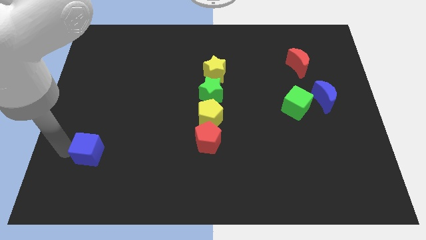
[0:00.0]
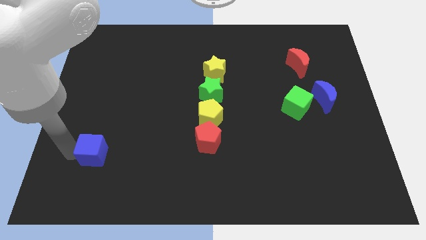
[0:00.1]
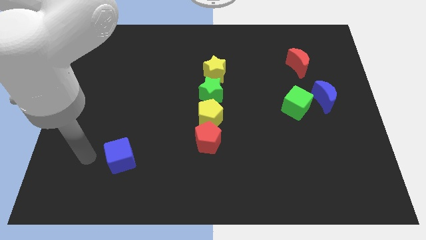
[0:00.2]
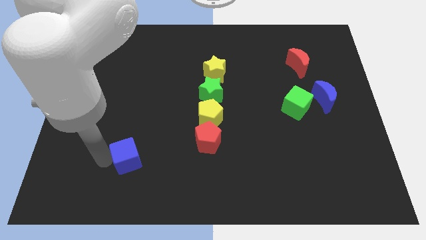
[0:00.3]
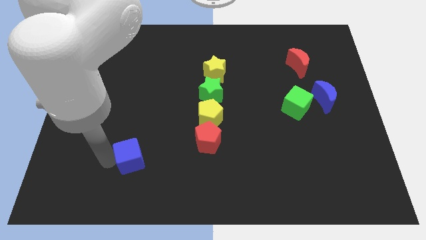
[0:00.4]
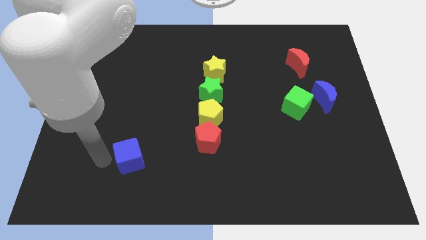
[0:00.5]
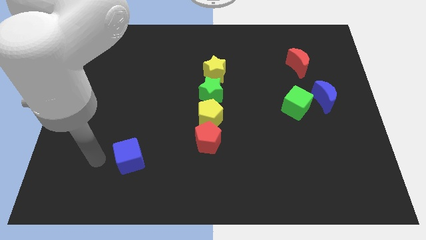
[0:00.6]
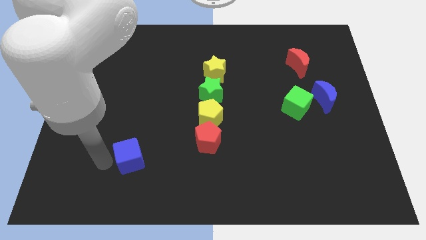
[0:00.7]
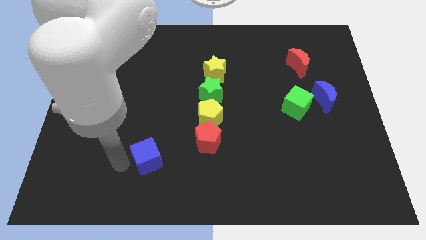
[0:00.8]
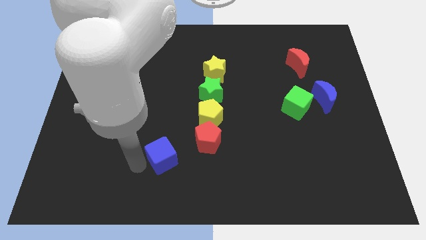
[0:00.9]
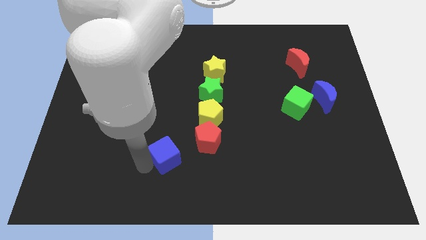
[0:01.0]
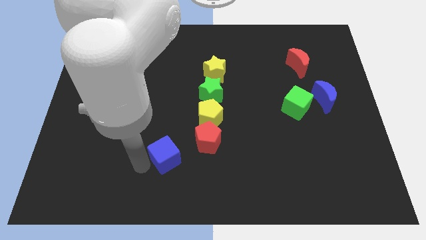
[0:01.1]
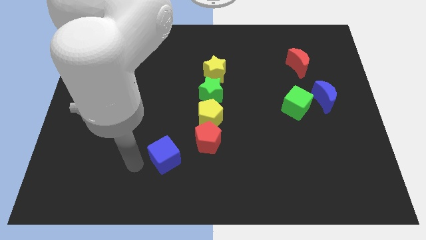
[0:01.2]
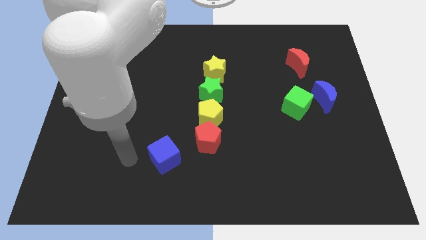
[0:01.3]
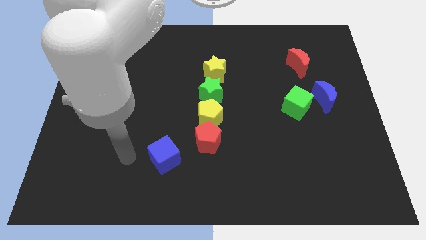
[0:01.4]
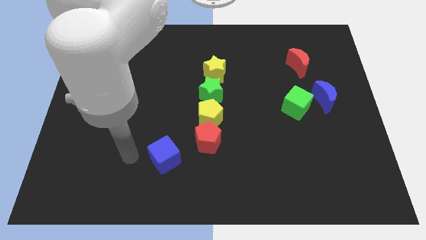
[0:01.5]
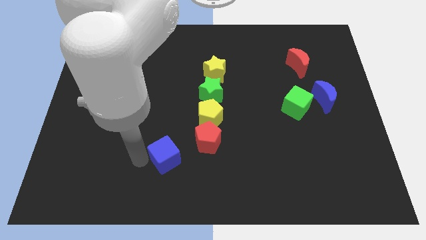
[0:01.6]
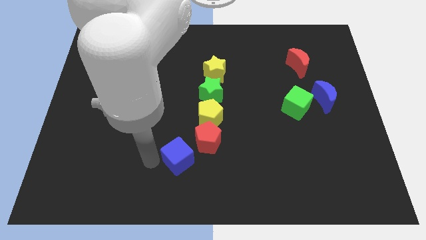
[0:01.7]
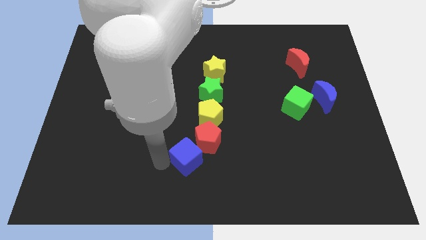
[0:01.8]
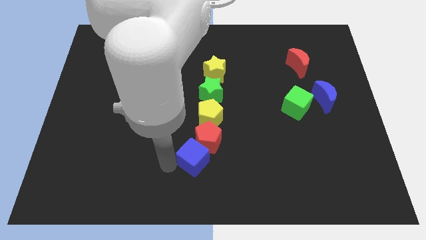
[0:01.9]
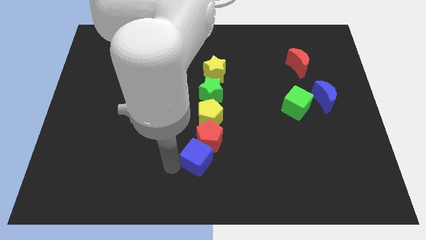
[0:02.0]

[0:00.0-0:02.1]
move the blue cube diagonally below the red pentagon

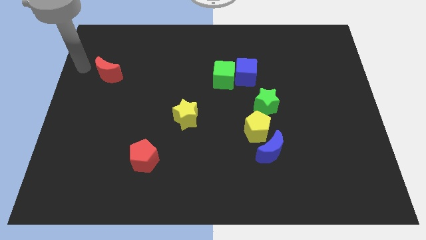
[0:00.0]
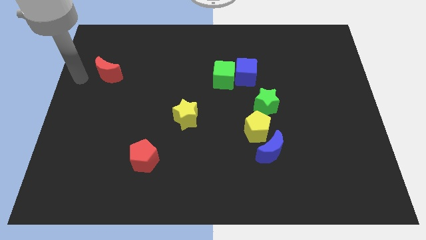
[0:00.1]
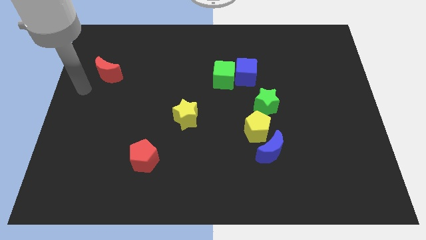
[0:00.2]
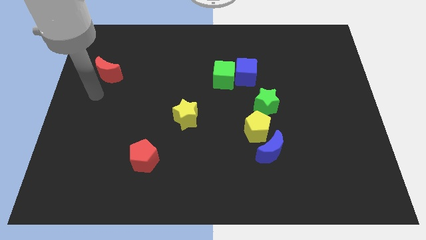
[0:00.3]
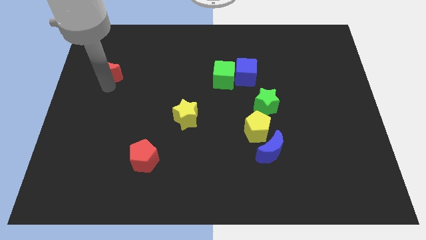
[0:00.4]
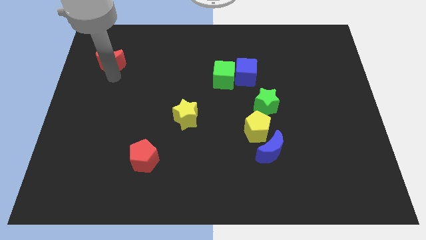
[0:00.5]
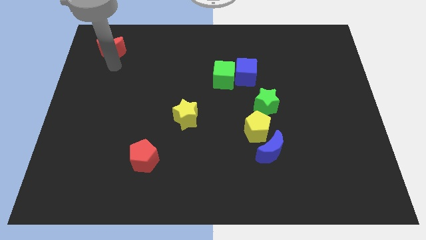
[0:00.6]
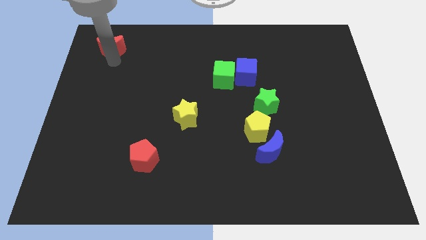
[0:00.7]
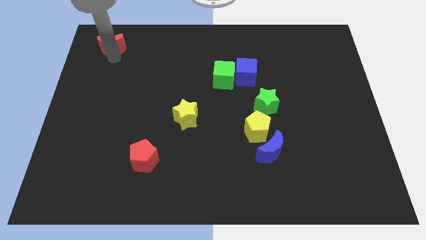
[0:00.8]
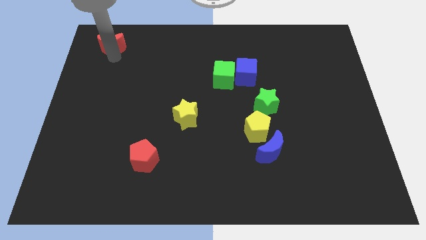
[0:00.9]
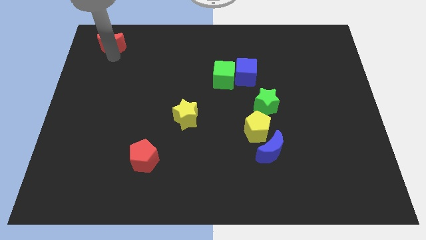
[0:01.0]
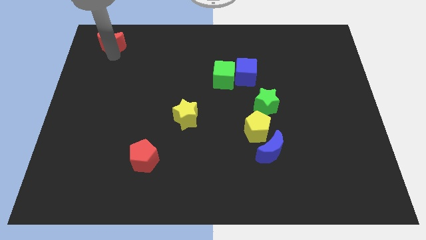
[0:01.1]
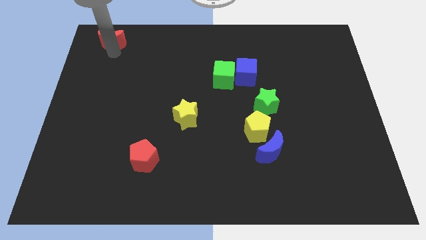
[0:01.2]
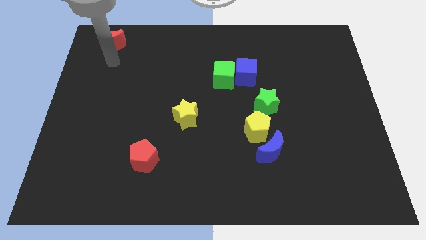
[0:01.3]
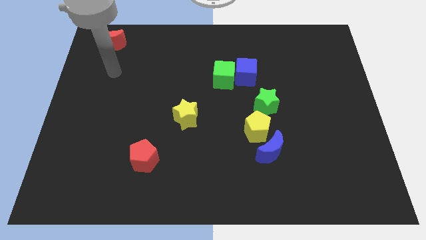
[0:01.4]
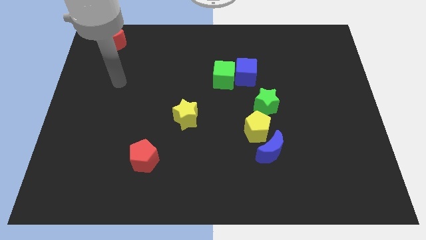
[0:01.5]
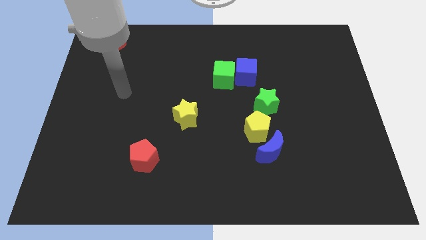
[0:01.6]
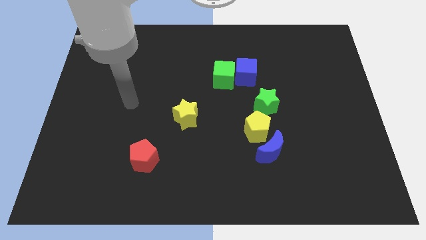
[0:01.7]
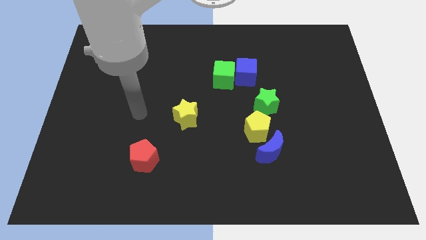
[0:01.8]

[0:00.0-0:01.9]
push the red crescent to the top left of the board

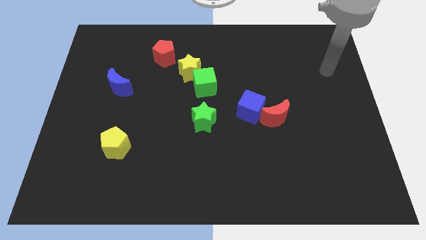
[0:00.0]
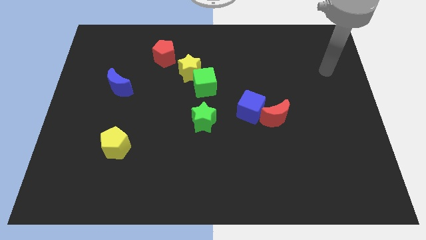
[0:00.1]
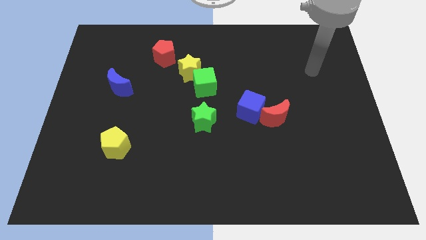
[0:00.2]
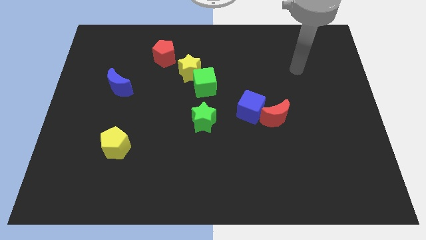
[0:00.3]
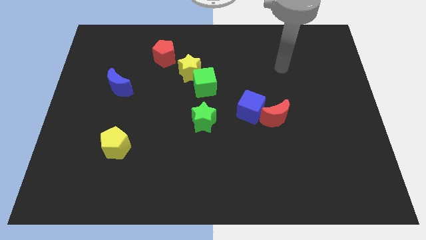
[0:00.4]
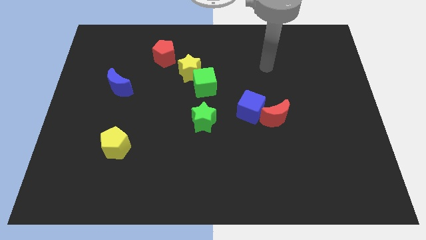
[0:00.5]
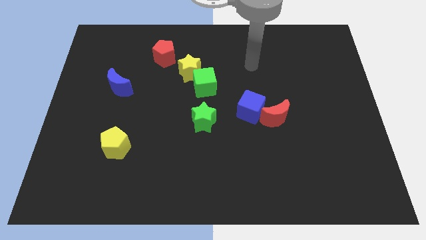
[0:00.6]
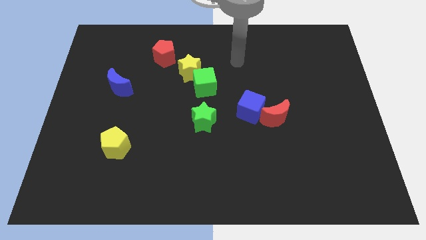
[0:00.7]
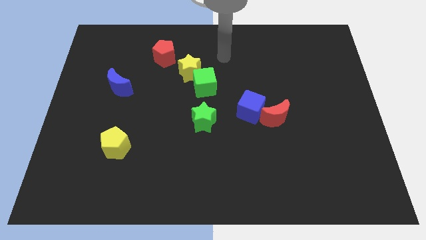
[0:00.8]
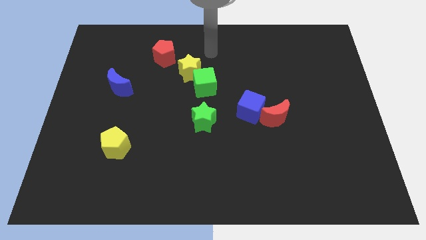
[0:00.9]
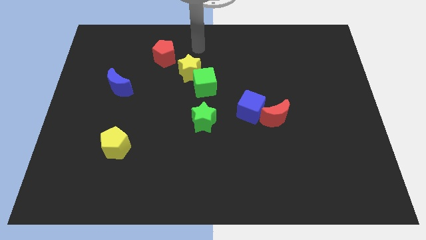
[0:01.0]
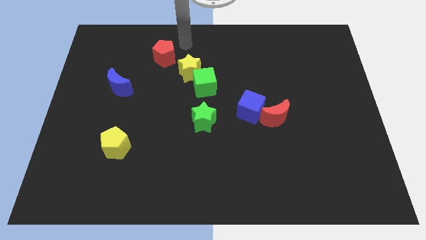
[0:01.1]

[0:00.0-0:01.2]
move the arm towards the yellow star

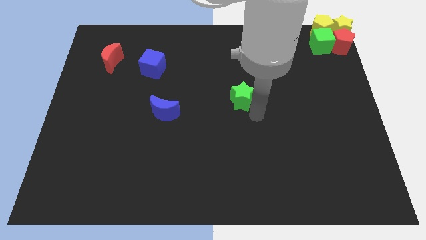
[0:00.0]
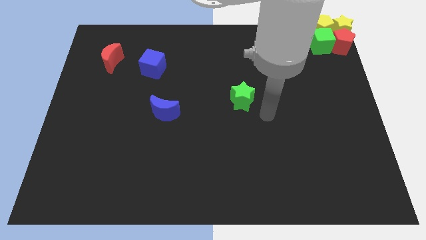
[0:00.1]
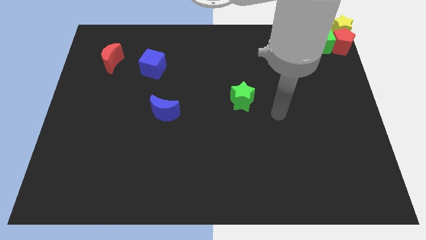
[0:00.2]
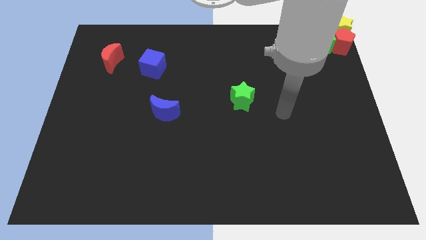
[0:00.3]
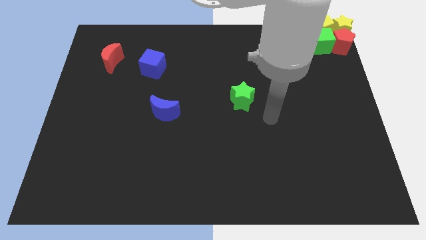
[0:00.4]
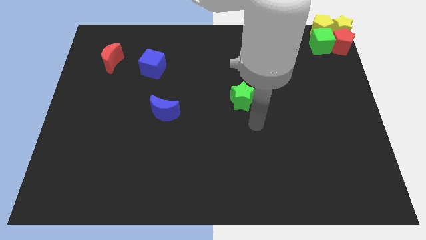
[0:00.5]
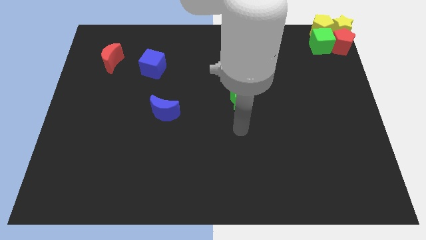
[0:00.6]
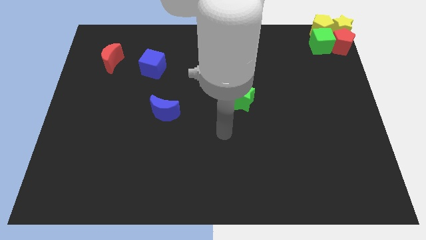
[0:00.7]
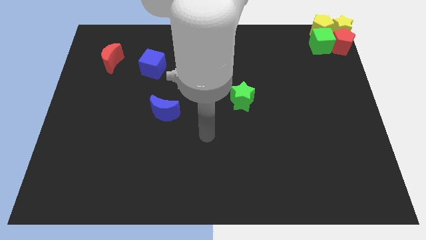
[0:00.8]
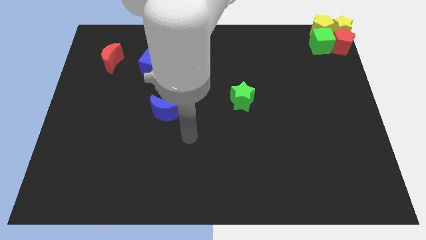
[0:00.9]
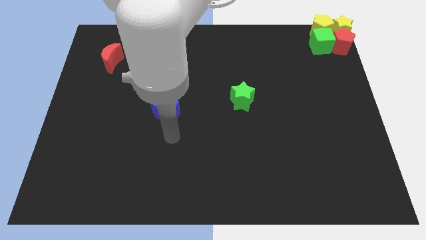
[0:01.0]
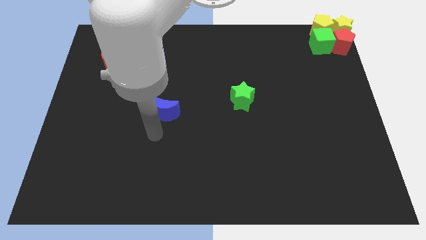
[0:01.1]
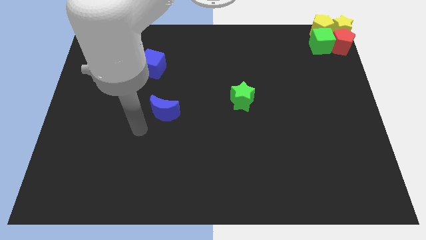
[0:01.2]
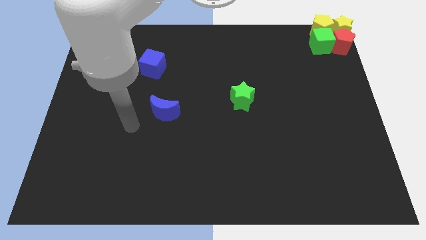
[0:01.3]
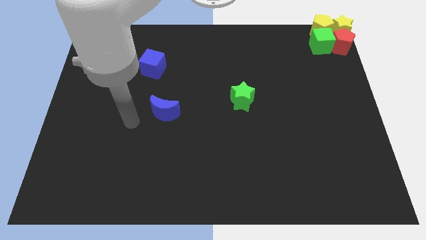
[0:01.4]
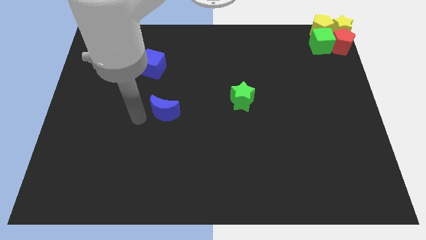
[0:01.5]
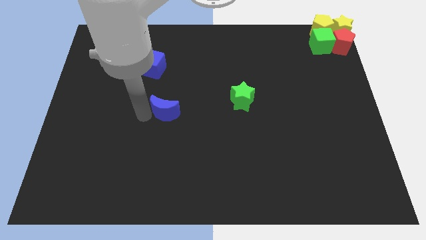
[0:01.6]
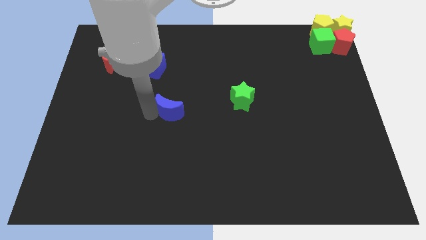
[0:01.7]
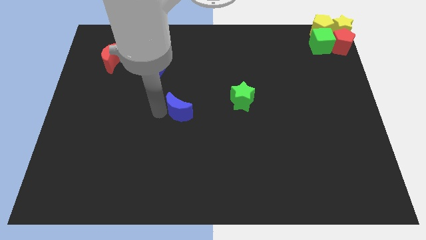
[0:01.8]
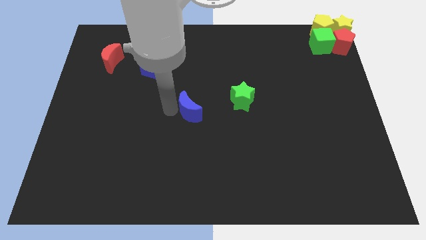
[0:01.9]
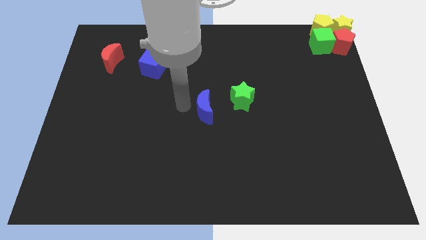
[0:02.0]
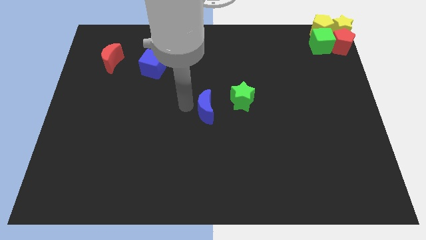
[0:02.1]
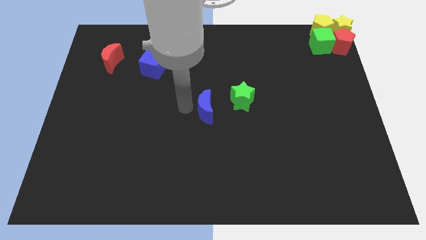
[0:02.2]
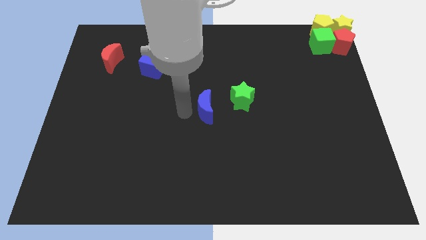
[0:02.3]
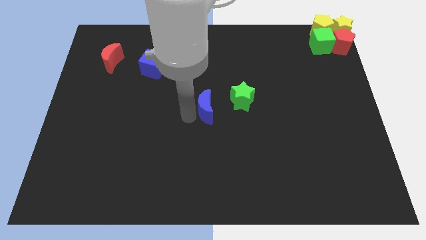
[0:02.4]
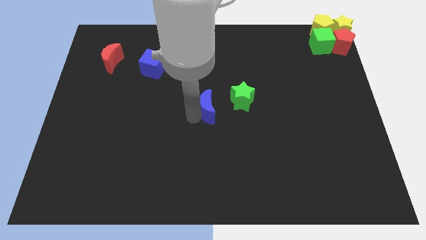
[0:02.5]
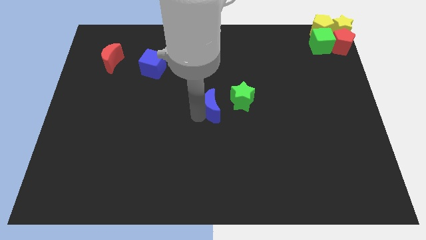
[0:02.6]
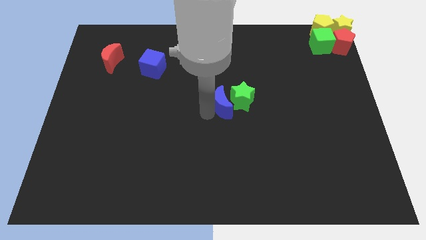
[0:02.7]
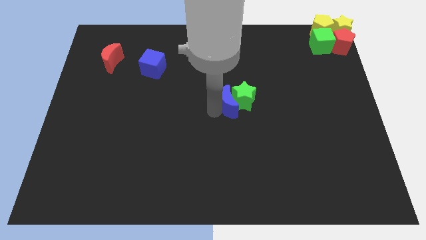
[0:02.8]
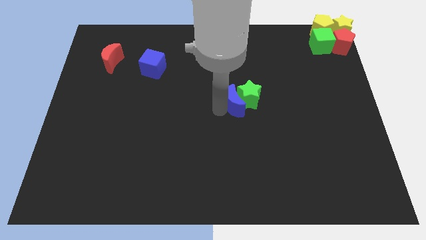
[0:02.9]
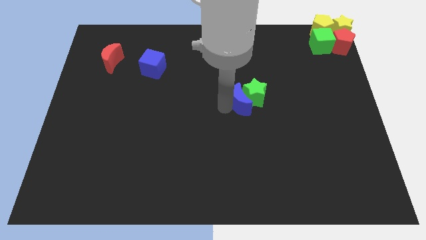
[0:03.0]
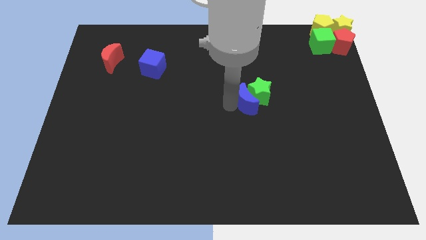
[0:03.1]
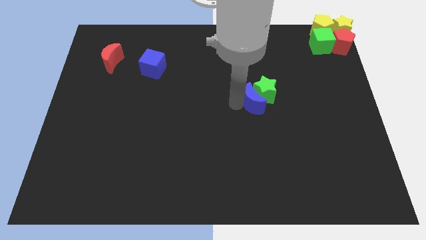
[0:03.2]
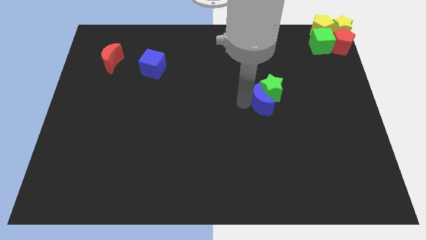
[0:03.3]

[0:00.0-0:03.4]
push blue crescent into green star

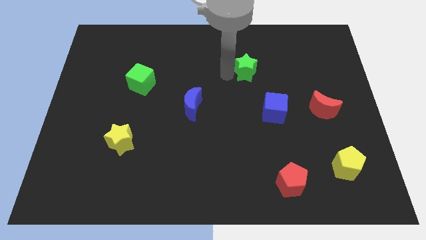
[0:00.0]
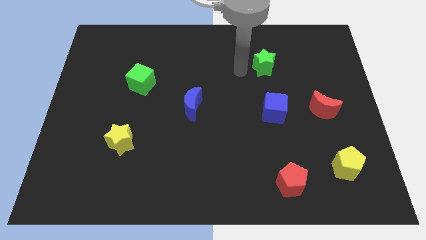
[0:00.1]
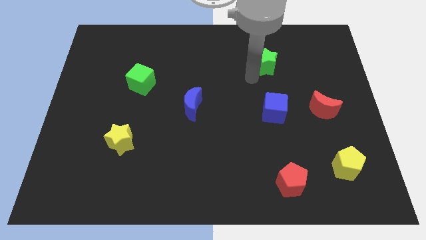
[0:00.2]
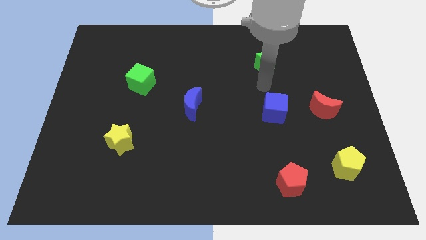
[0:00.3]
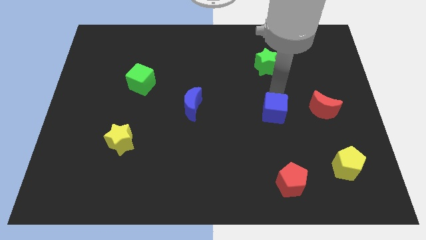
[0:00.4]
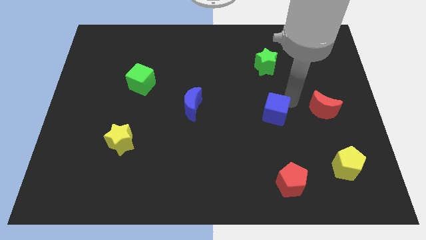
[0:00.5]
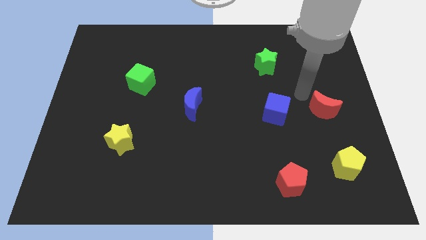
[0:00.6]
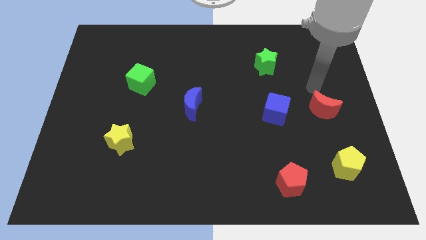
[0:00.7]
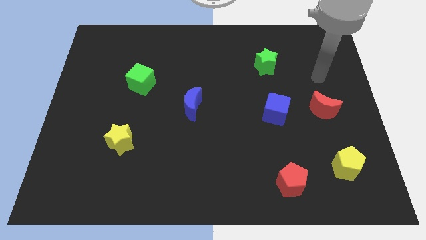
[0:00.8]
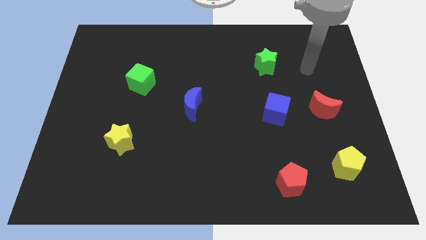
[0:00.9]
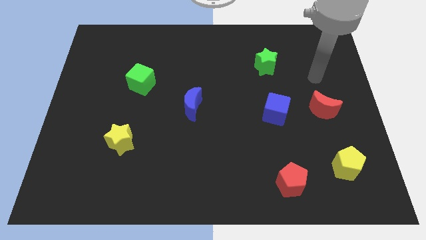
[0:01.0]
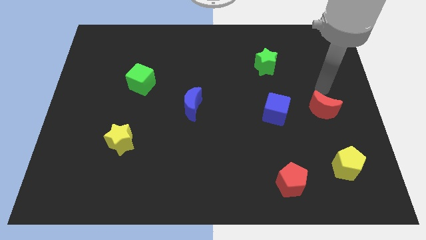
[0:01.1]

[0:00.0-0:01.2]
place your arm on the top of red crescent
